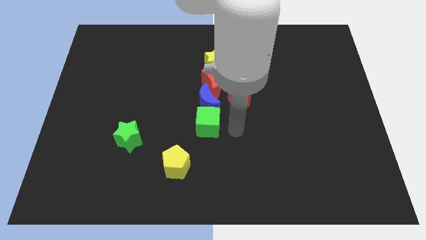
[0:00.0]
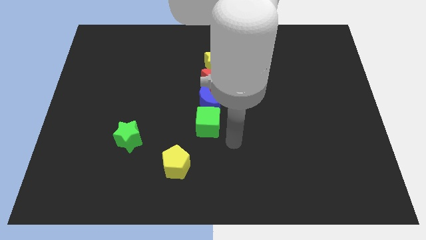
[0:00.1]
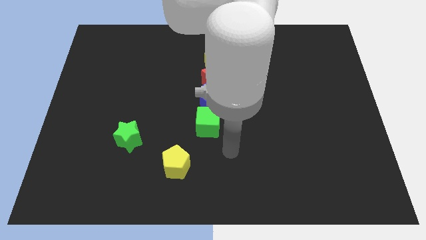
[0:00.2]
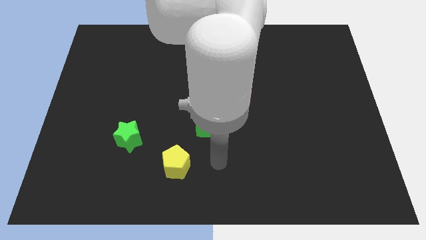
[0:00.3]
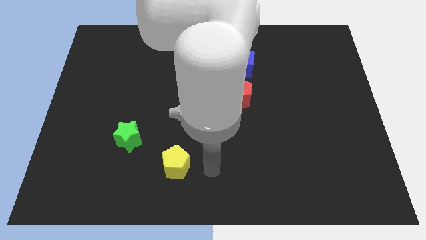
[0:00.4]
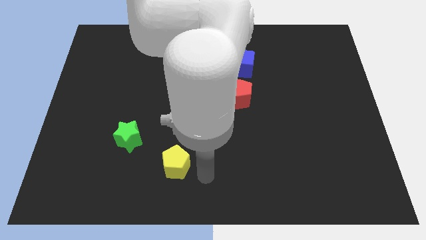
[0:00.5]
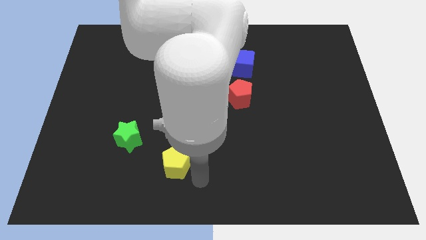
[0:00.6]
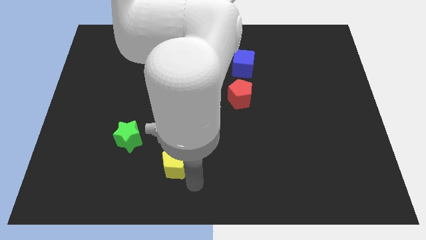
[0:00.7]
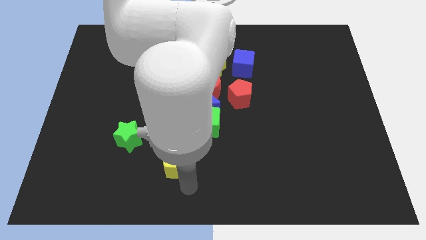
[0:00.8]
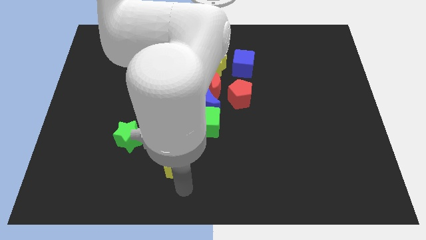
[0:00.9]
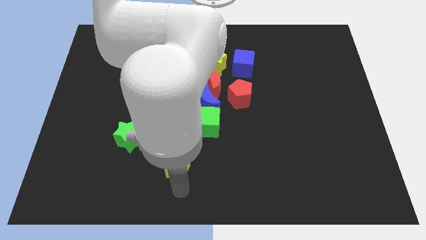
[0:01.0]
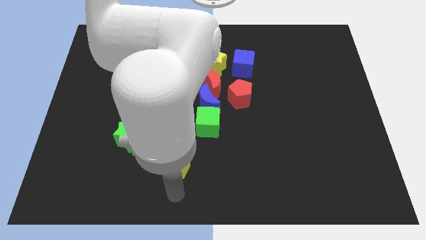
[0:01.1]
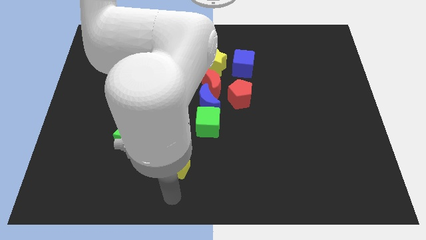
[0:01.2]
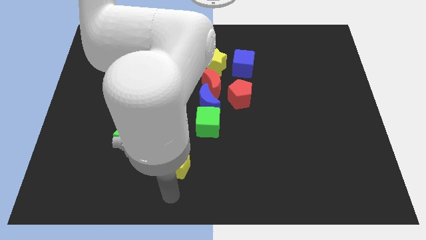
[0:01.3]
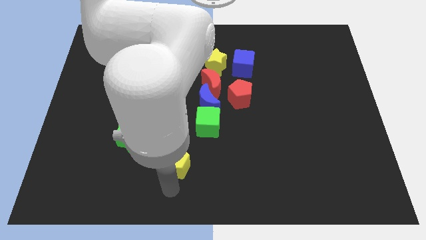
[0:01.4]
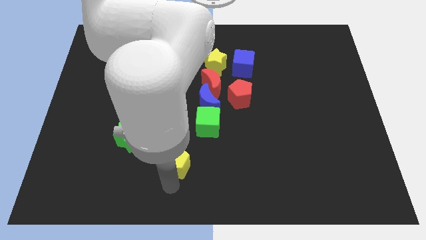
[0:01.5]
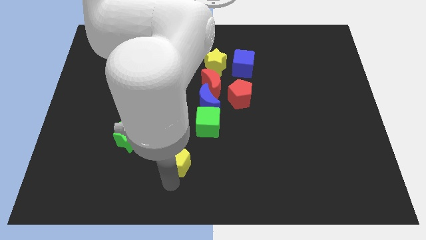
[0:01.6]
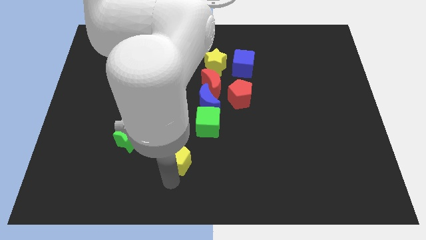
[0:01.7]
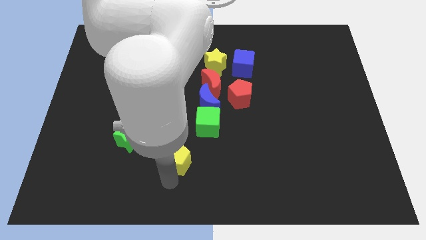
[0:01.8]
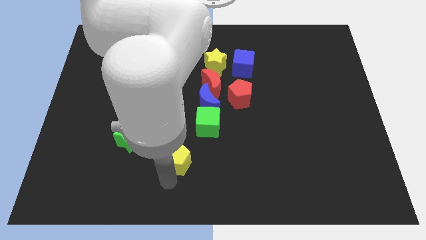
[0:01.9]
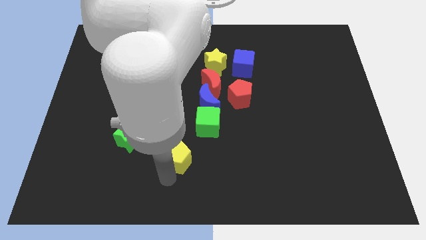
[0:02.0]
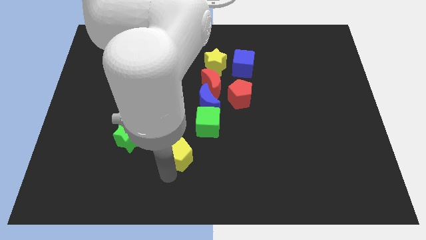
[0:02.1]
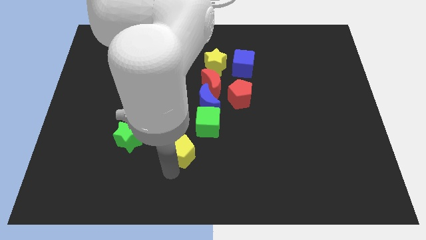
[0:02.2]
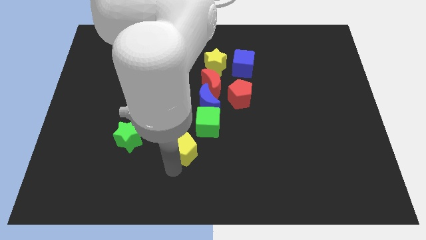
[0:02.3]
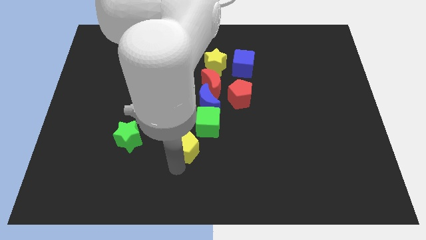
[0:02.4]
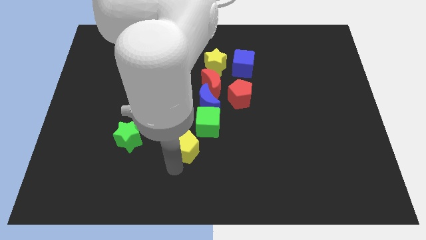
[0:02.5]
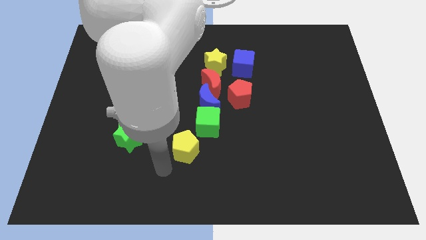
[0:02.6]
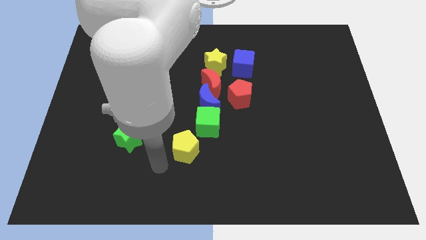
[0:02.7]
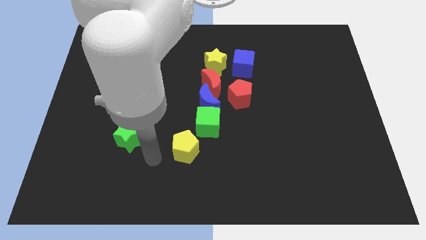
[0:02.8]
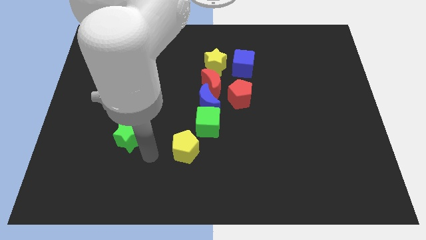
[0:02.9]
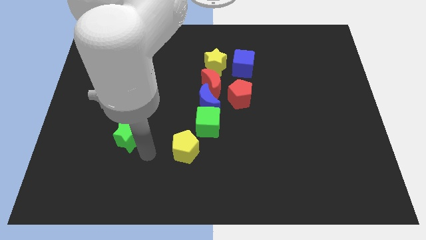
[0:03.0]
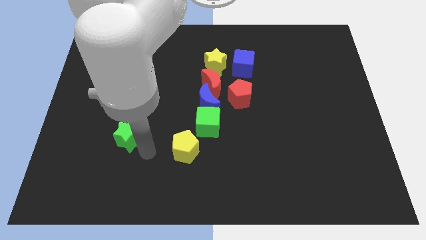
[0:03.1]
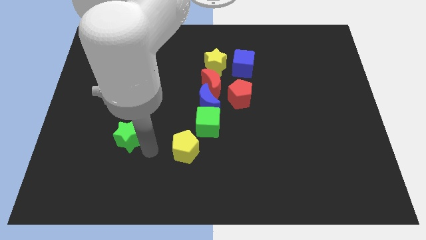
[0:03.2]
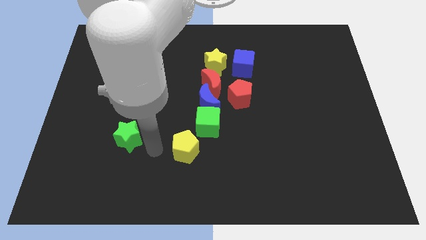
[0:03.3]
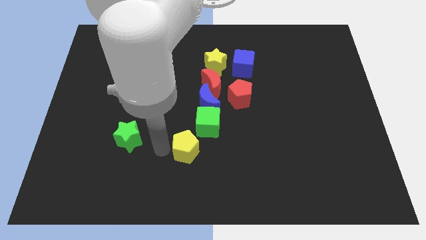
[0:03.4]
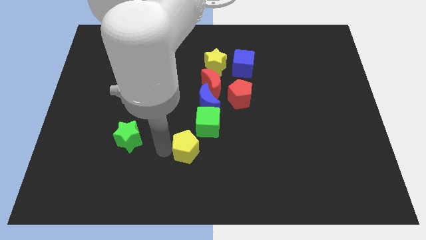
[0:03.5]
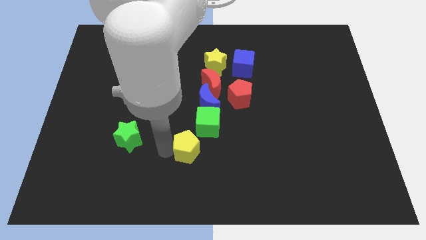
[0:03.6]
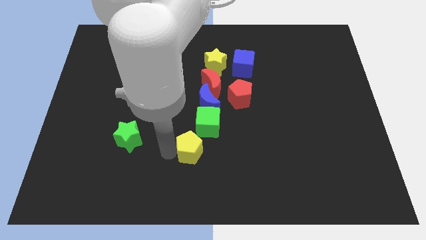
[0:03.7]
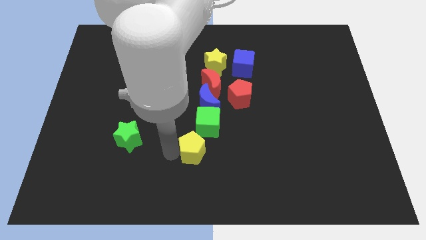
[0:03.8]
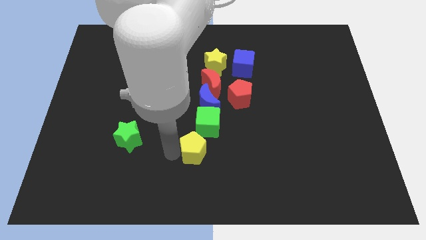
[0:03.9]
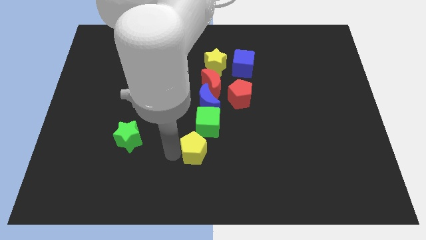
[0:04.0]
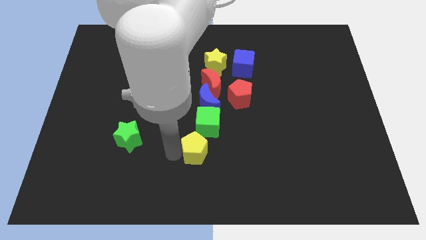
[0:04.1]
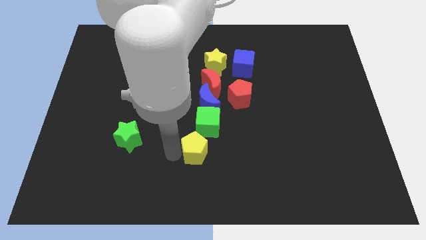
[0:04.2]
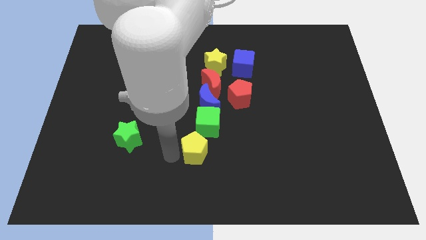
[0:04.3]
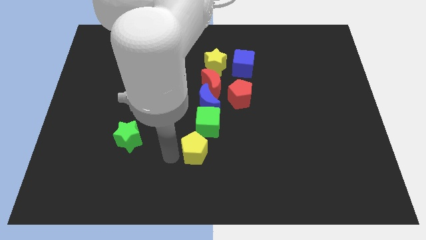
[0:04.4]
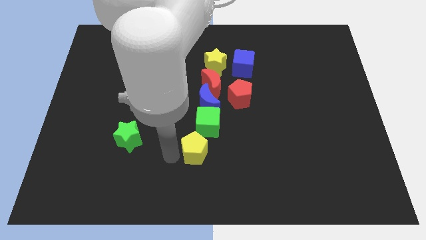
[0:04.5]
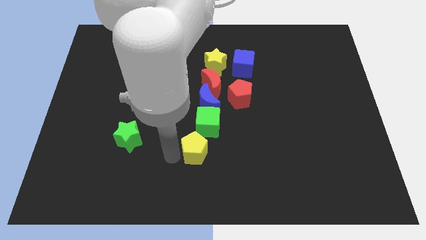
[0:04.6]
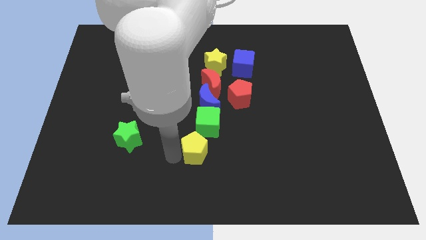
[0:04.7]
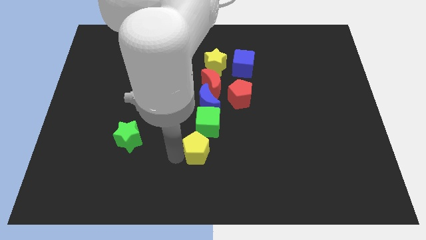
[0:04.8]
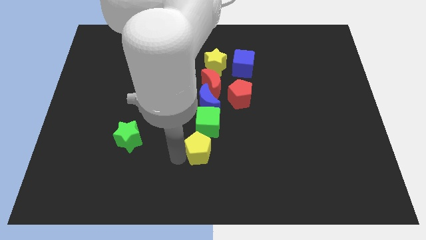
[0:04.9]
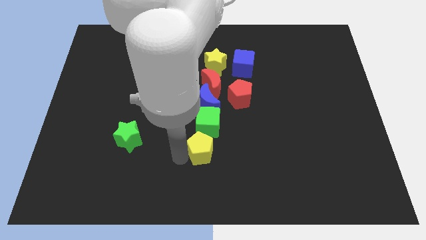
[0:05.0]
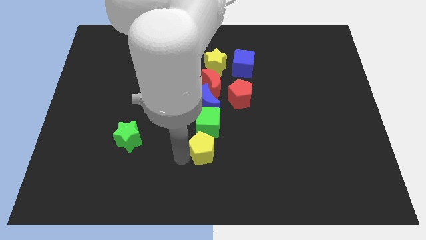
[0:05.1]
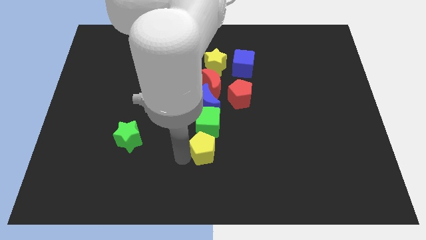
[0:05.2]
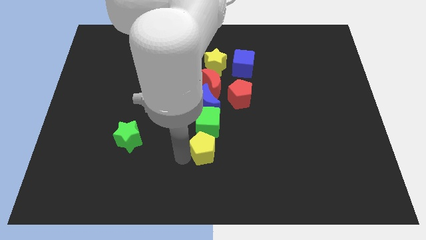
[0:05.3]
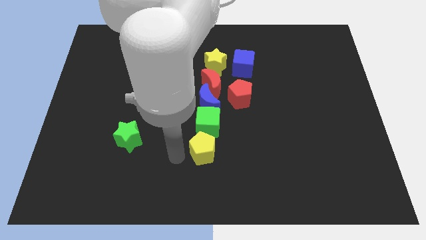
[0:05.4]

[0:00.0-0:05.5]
push the yellow pentagon to the bottom of the green cube

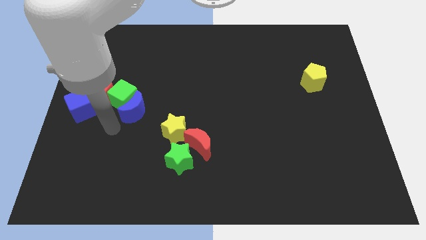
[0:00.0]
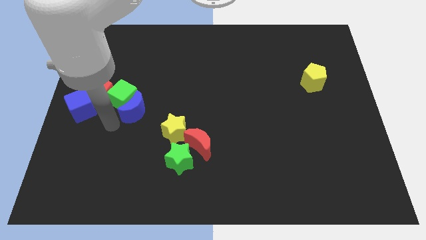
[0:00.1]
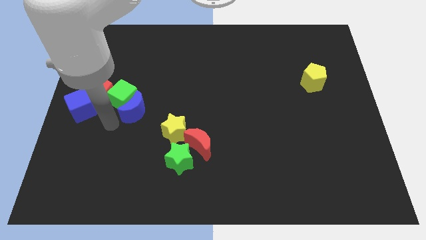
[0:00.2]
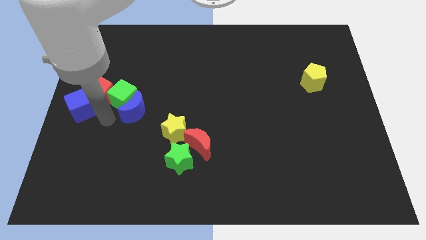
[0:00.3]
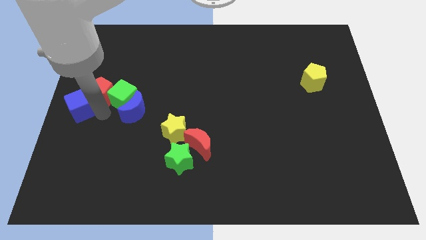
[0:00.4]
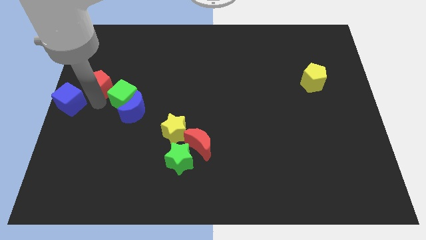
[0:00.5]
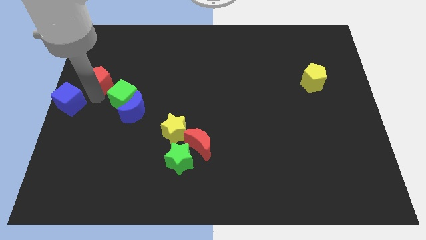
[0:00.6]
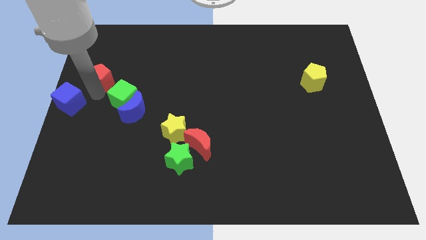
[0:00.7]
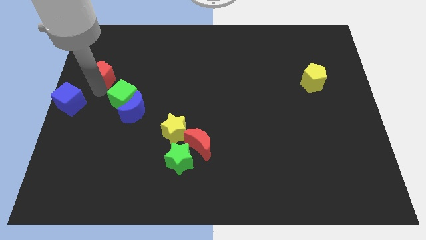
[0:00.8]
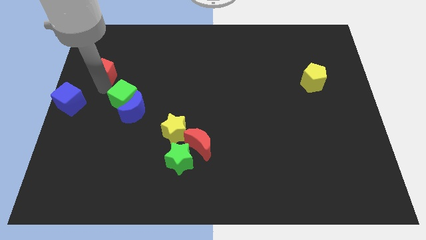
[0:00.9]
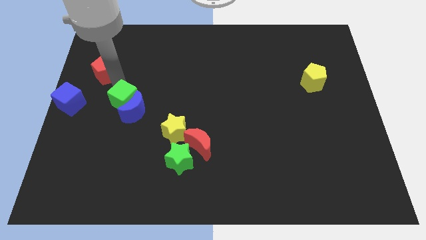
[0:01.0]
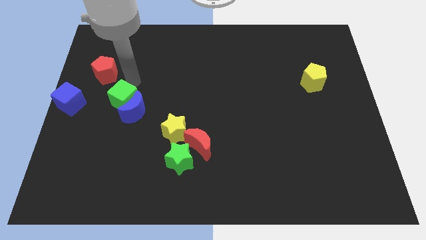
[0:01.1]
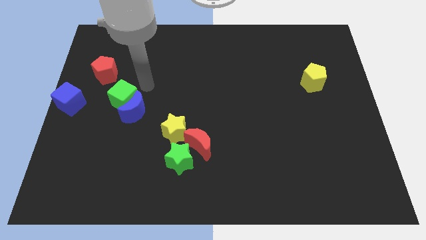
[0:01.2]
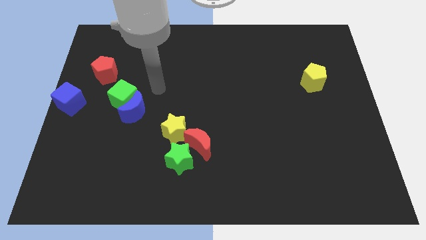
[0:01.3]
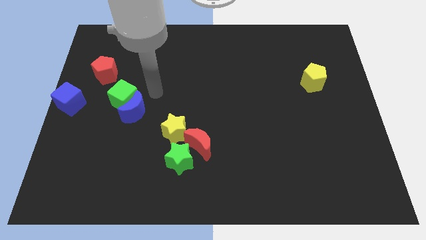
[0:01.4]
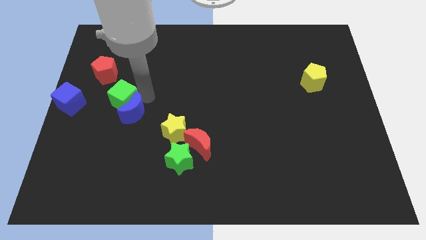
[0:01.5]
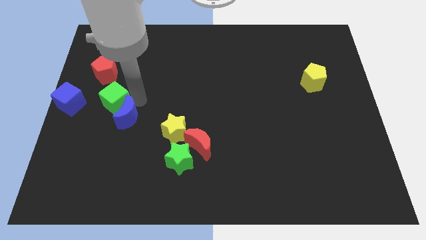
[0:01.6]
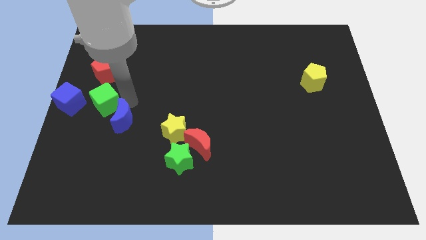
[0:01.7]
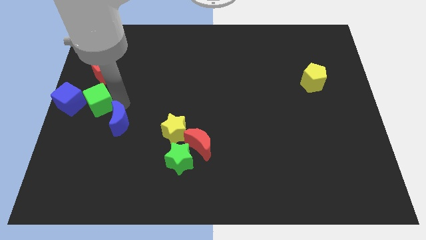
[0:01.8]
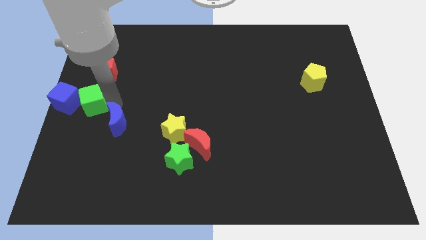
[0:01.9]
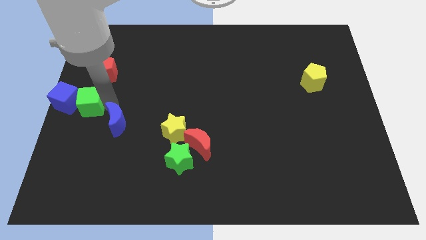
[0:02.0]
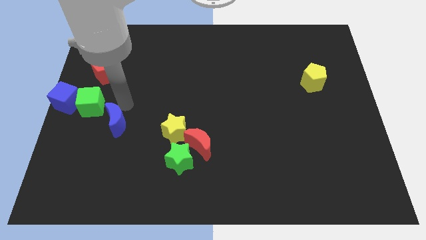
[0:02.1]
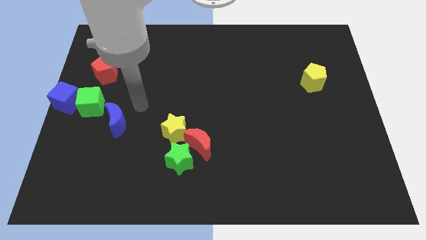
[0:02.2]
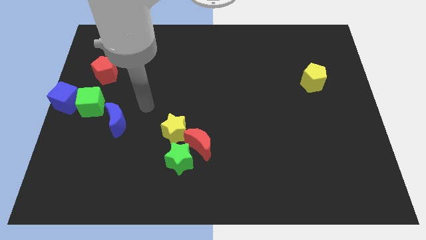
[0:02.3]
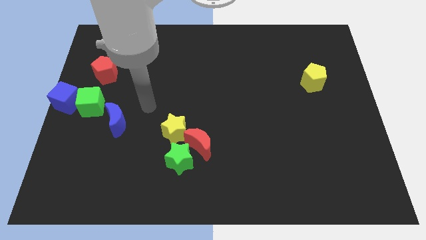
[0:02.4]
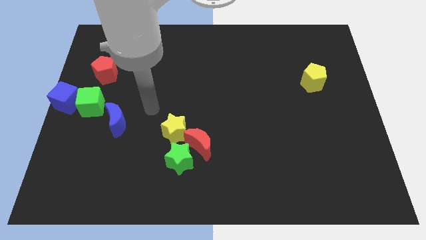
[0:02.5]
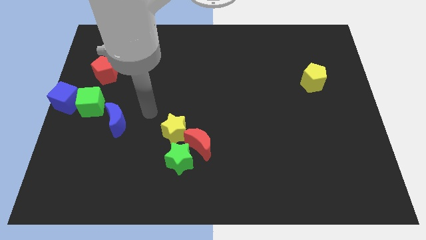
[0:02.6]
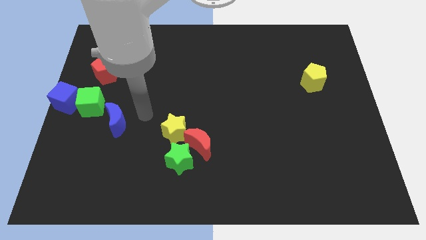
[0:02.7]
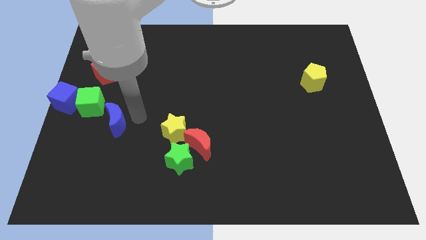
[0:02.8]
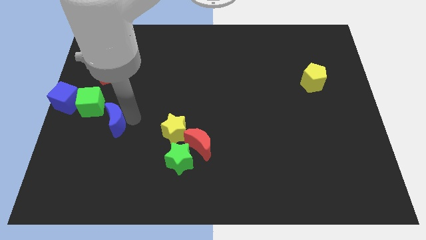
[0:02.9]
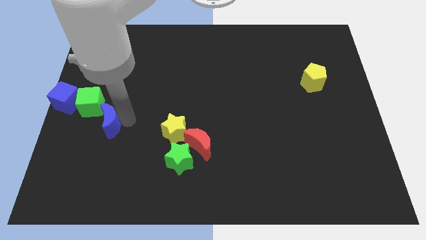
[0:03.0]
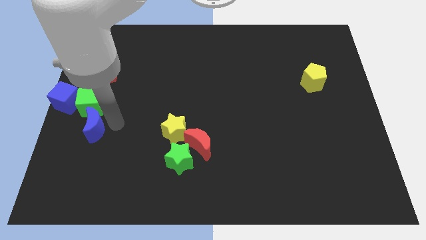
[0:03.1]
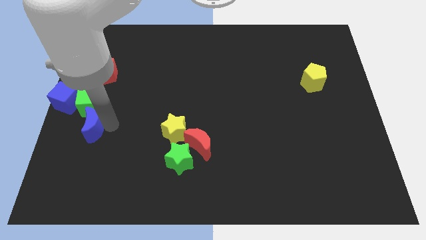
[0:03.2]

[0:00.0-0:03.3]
separate the red pentagon from group of block
